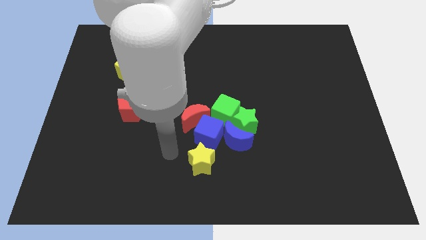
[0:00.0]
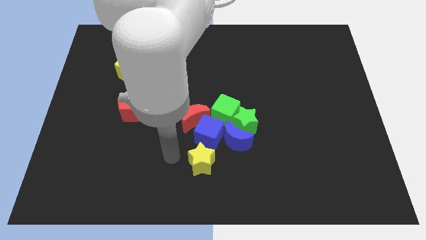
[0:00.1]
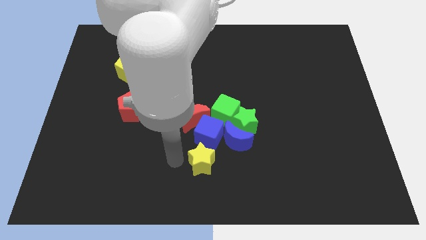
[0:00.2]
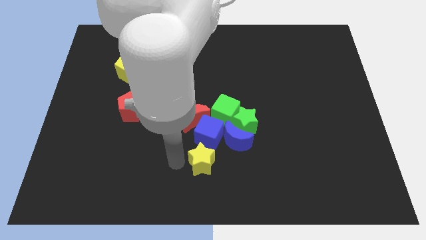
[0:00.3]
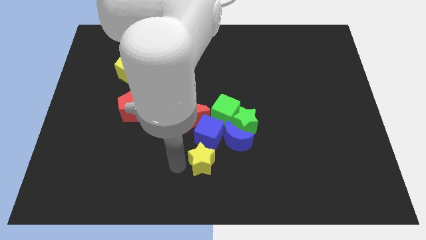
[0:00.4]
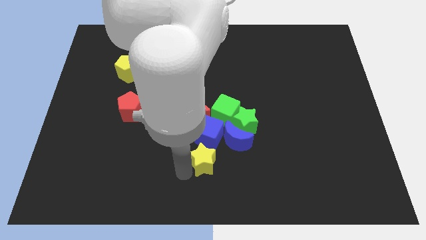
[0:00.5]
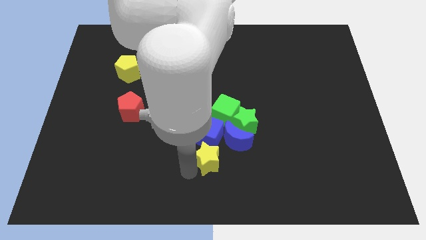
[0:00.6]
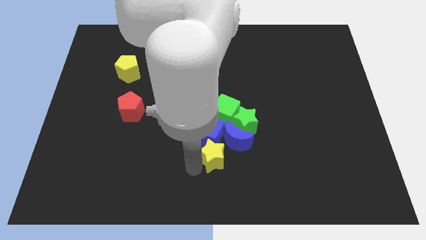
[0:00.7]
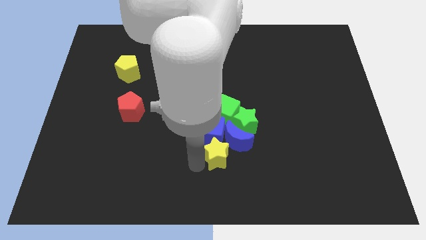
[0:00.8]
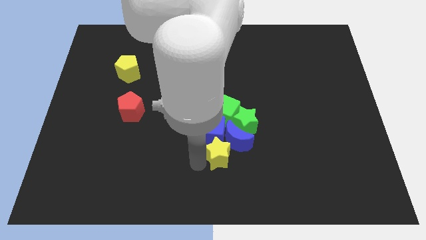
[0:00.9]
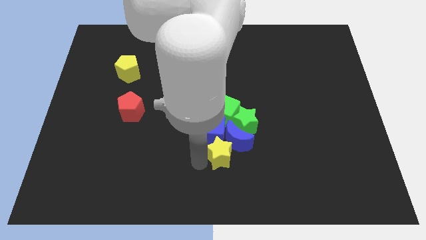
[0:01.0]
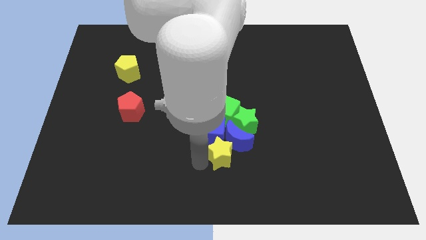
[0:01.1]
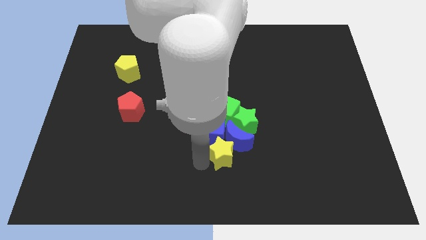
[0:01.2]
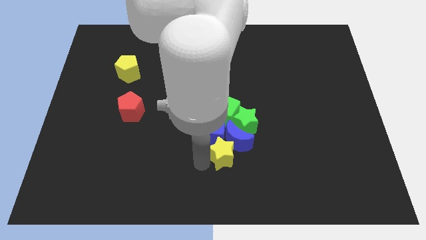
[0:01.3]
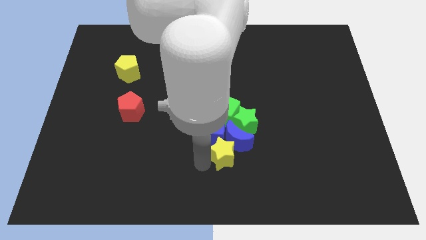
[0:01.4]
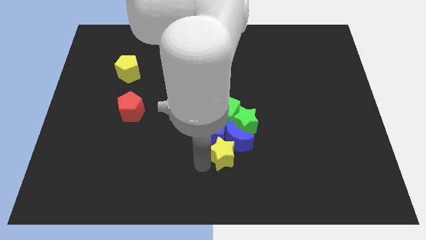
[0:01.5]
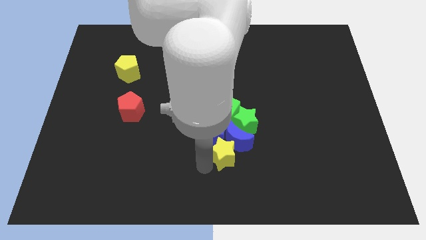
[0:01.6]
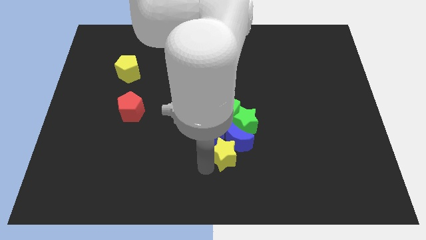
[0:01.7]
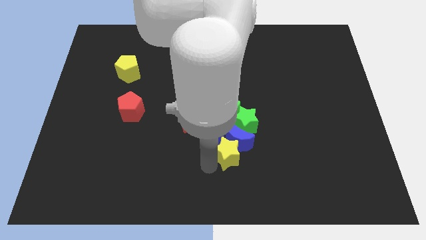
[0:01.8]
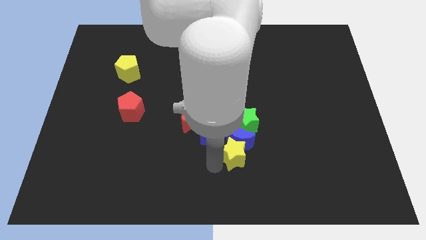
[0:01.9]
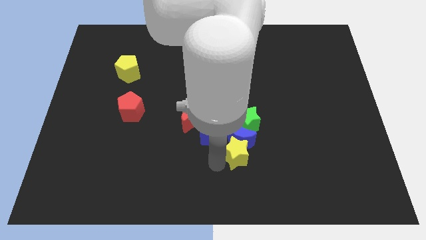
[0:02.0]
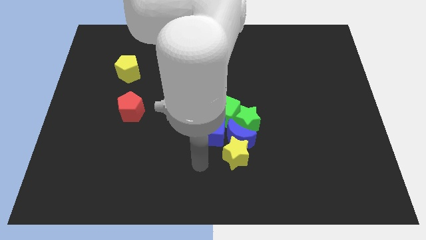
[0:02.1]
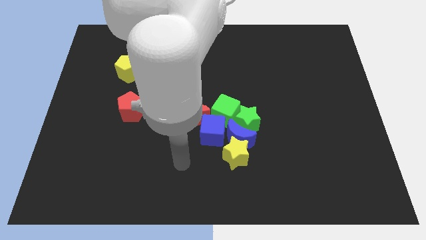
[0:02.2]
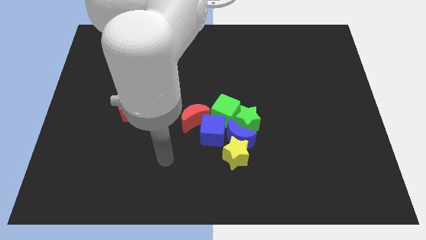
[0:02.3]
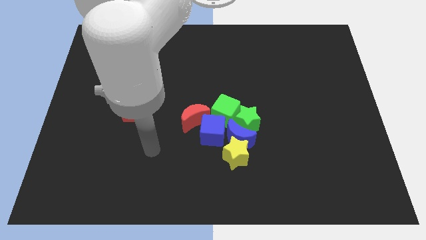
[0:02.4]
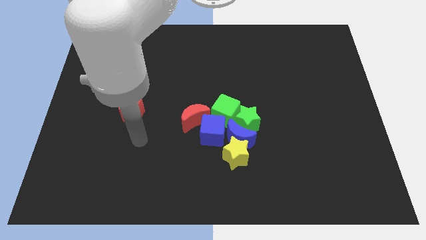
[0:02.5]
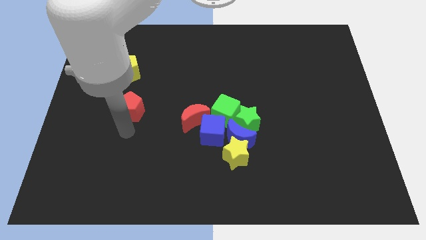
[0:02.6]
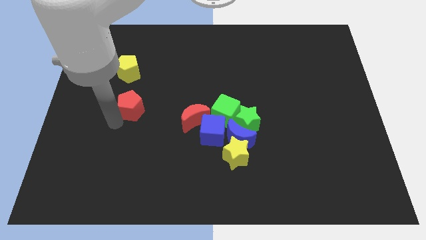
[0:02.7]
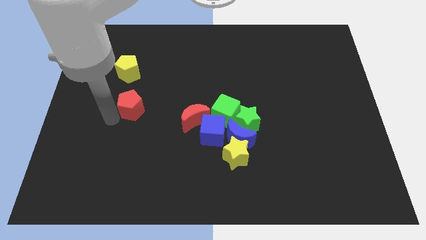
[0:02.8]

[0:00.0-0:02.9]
move the yellow star into the group of objects

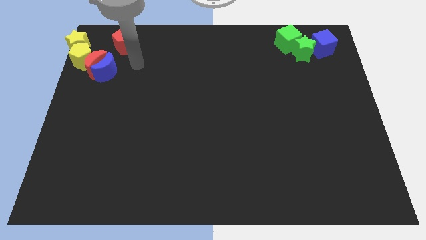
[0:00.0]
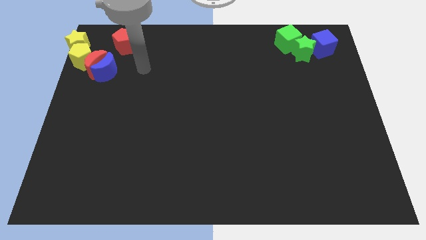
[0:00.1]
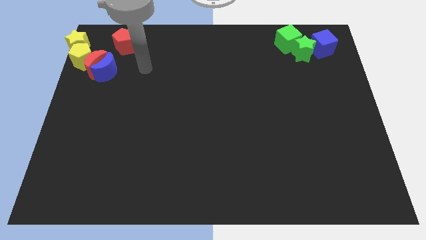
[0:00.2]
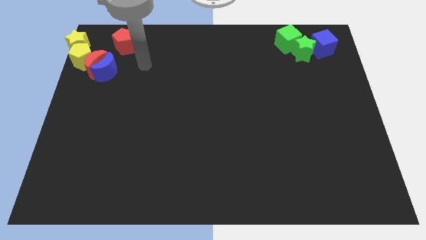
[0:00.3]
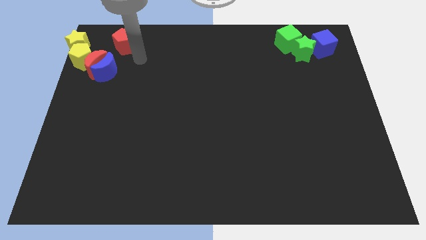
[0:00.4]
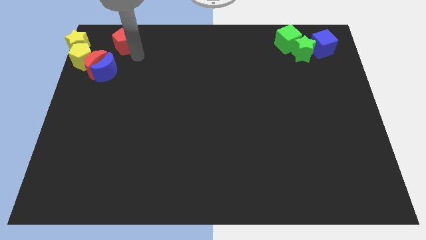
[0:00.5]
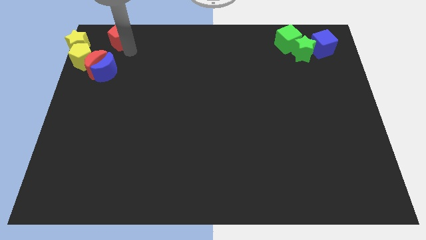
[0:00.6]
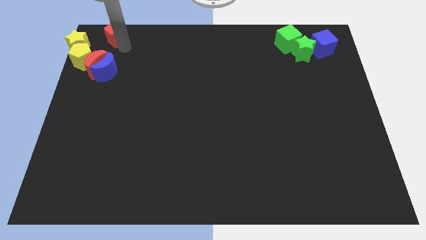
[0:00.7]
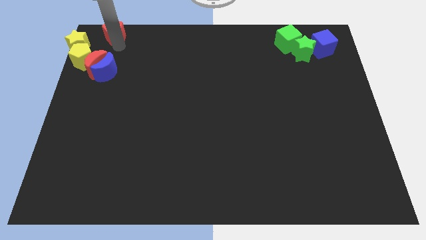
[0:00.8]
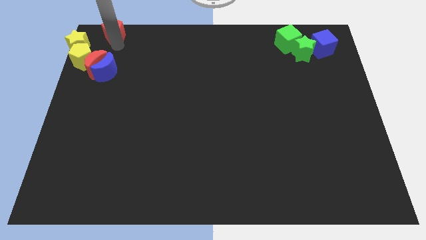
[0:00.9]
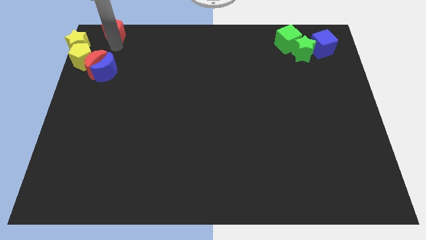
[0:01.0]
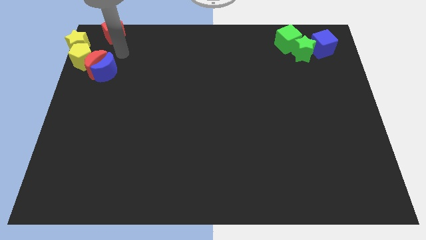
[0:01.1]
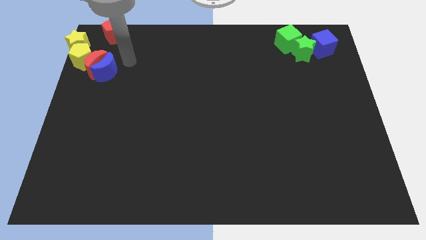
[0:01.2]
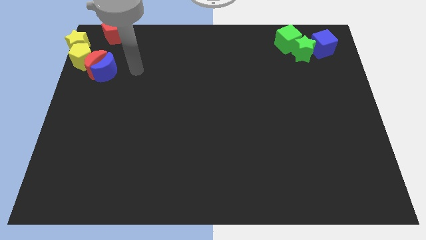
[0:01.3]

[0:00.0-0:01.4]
move the red pentagon to the top left

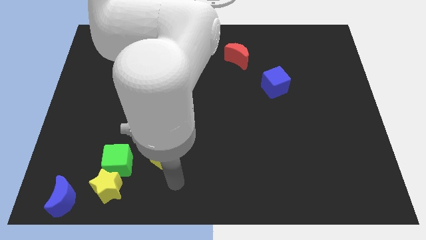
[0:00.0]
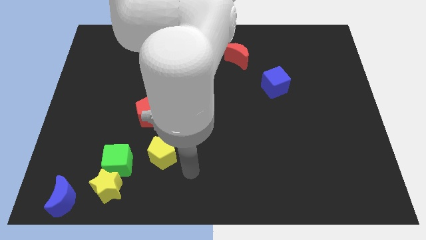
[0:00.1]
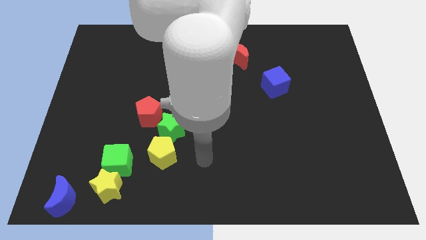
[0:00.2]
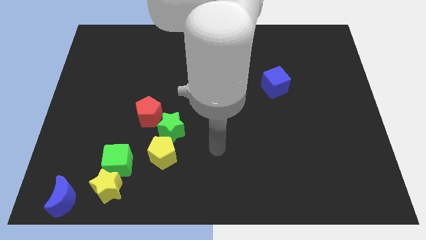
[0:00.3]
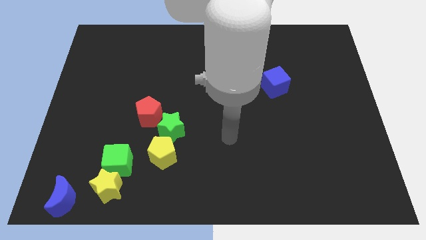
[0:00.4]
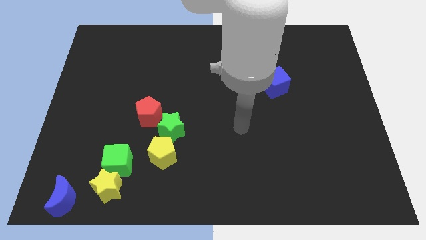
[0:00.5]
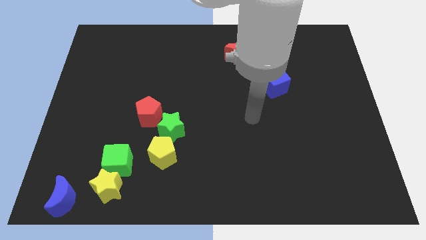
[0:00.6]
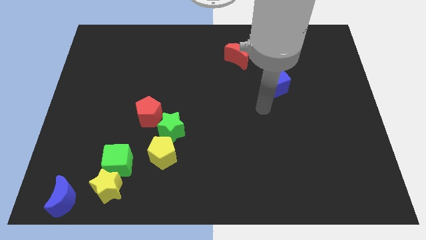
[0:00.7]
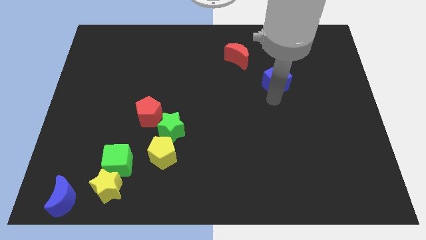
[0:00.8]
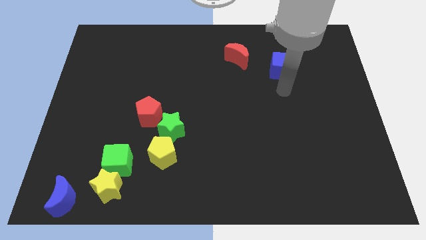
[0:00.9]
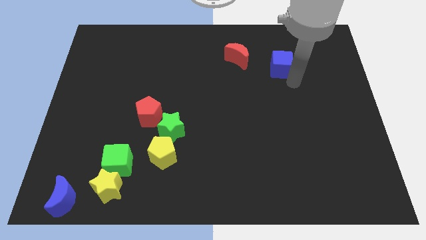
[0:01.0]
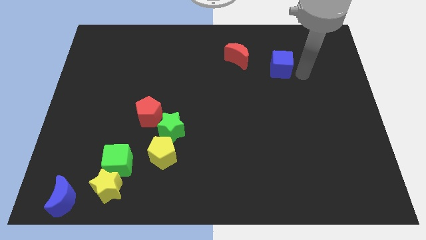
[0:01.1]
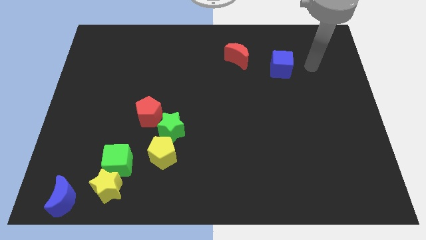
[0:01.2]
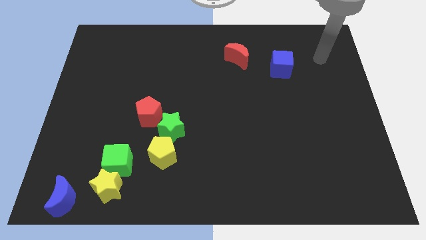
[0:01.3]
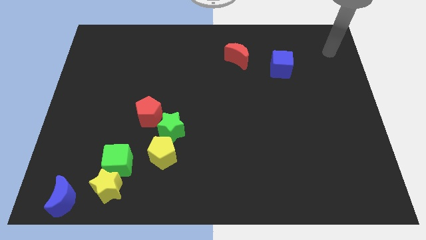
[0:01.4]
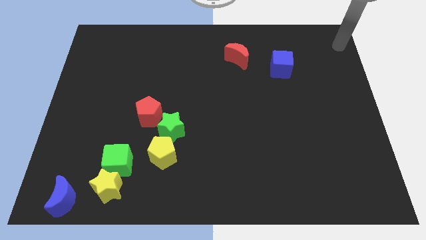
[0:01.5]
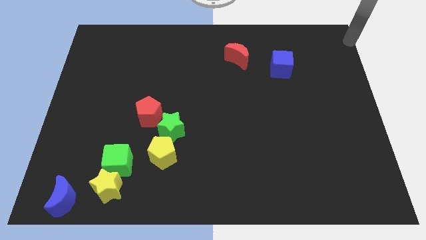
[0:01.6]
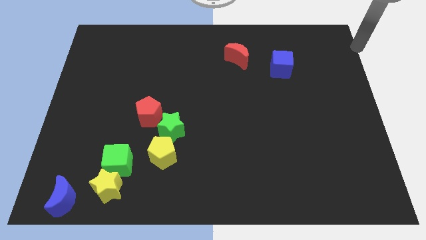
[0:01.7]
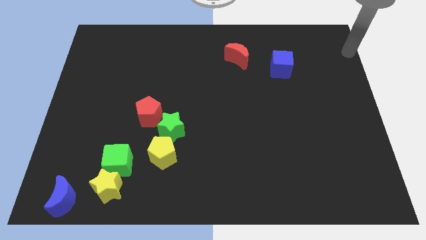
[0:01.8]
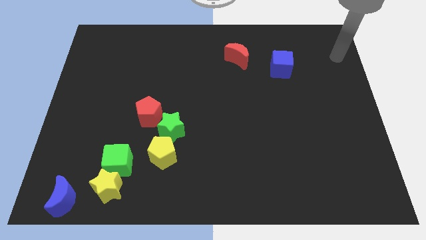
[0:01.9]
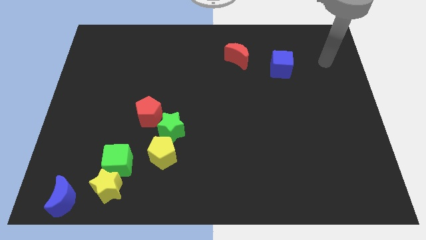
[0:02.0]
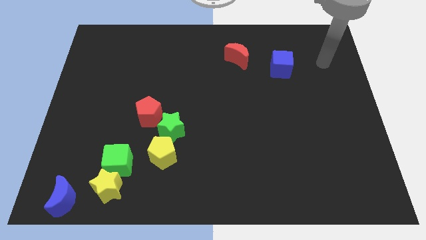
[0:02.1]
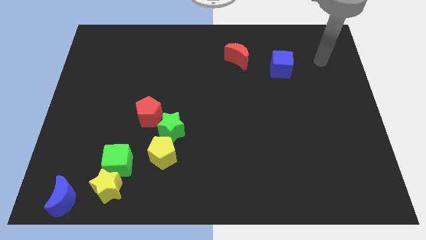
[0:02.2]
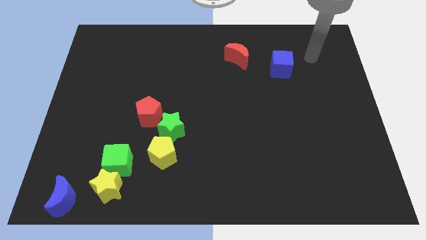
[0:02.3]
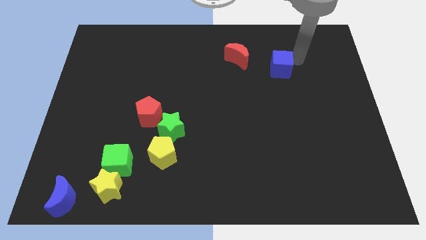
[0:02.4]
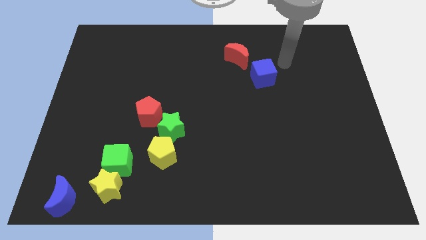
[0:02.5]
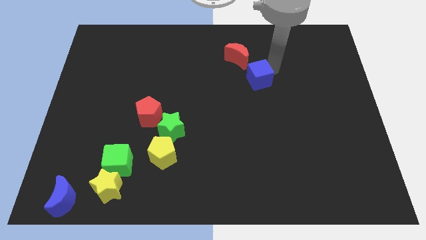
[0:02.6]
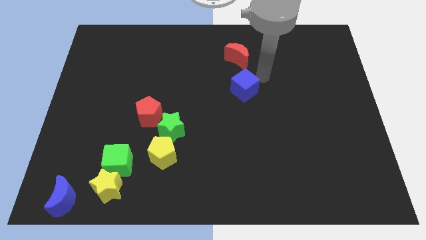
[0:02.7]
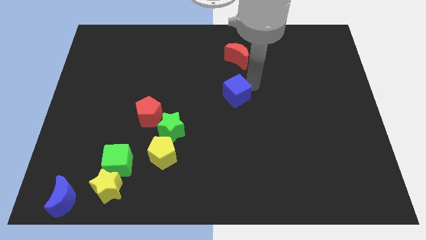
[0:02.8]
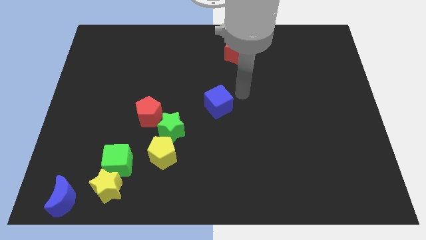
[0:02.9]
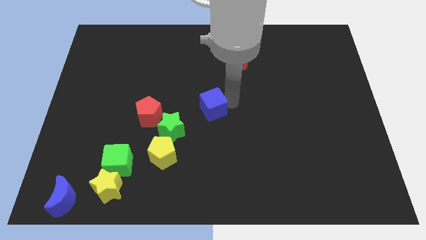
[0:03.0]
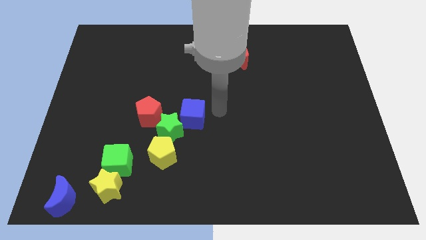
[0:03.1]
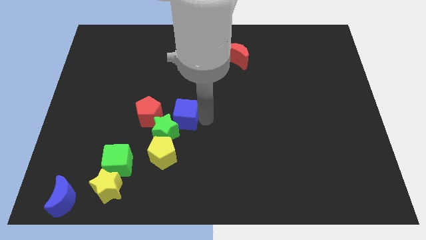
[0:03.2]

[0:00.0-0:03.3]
move blue cube to the top right of green star

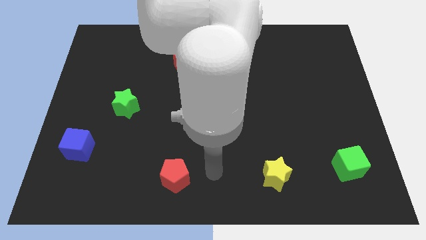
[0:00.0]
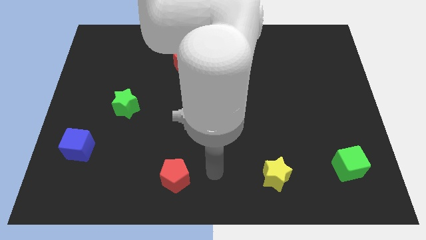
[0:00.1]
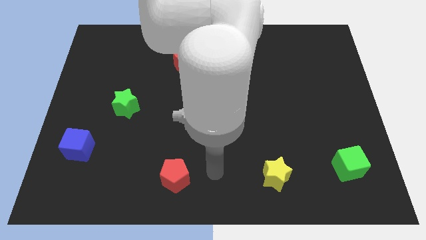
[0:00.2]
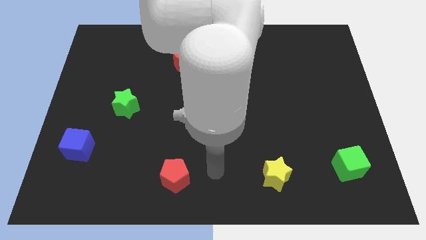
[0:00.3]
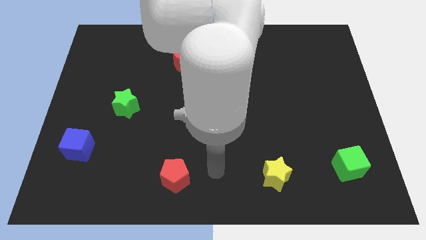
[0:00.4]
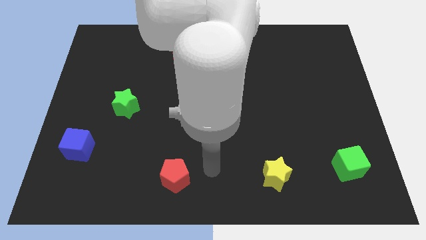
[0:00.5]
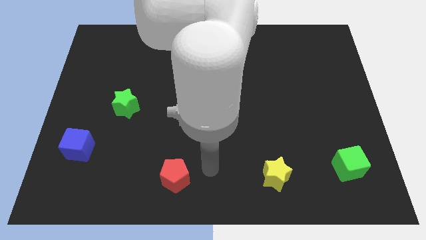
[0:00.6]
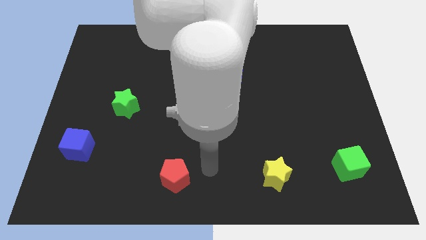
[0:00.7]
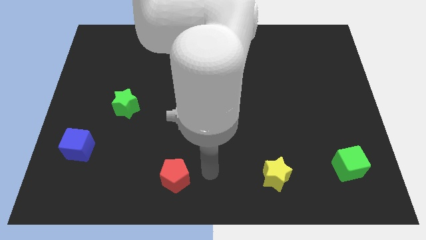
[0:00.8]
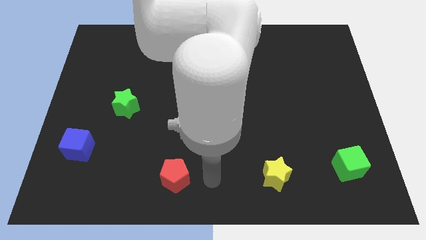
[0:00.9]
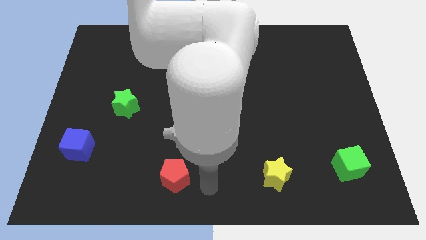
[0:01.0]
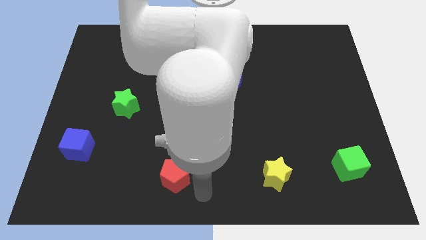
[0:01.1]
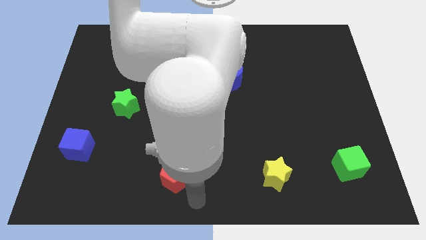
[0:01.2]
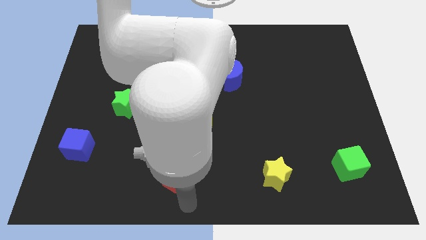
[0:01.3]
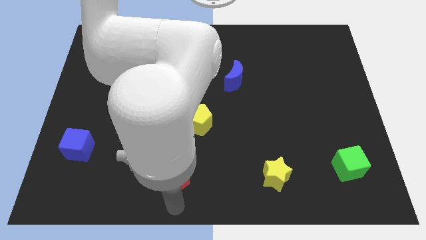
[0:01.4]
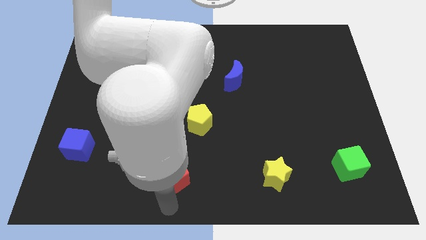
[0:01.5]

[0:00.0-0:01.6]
point your arm below the red pentagon
